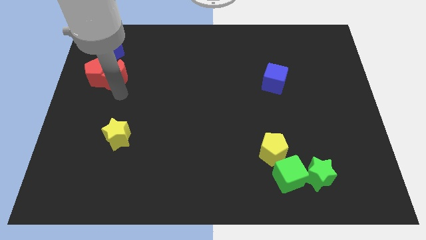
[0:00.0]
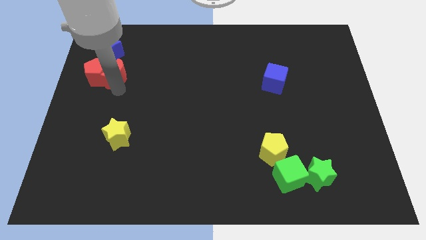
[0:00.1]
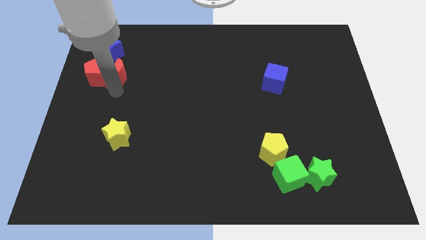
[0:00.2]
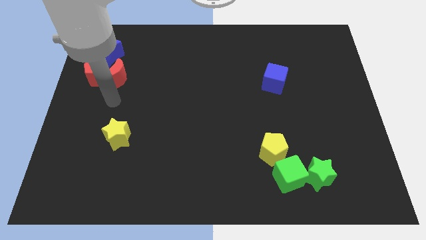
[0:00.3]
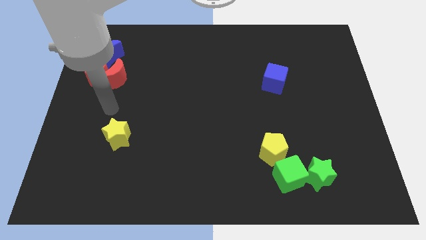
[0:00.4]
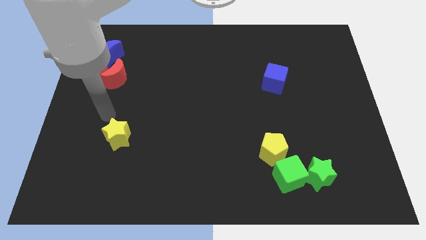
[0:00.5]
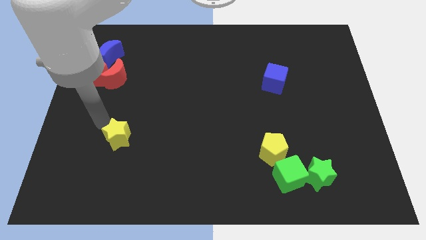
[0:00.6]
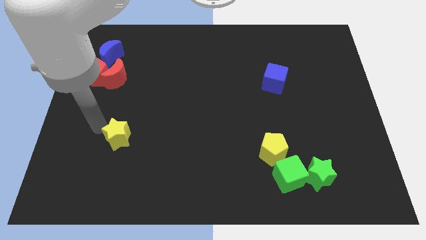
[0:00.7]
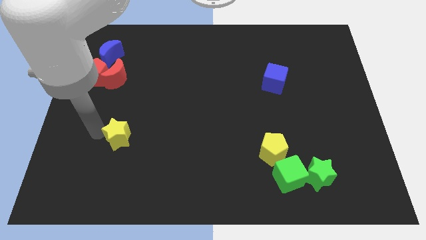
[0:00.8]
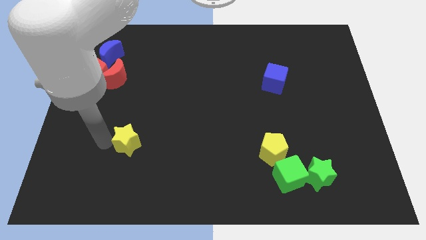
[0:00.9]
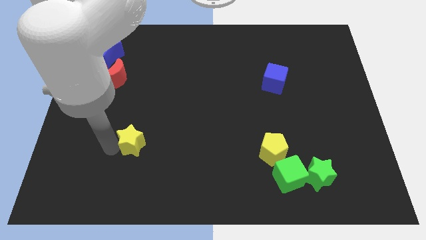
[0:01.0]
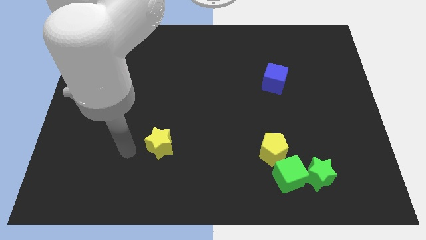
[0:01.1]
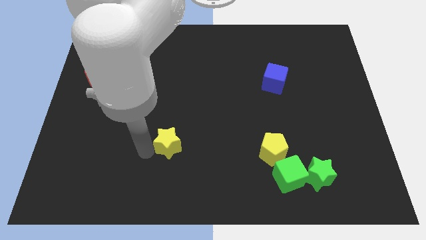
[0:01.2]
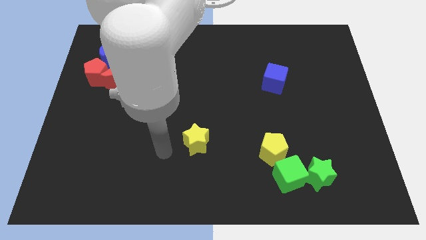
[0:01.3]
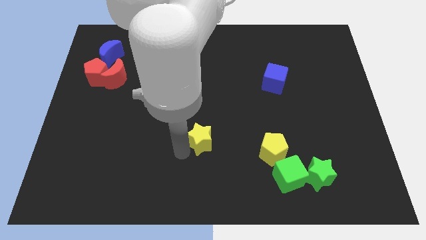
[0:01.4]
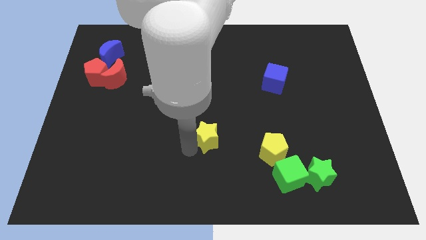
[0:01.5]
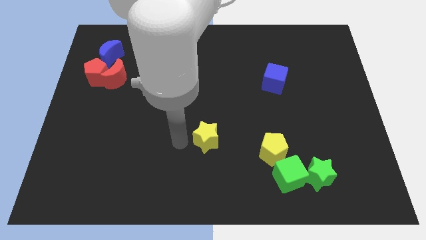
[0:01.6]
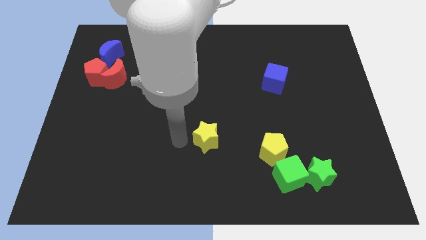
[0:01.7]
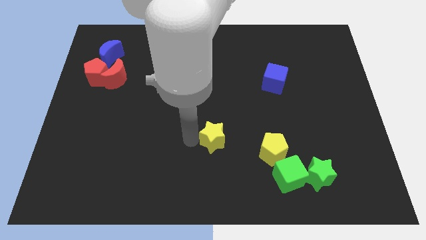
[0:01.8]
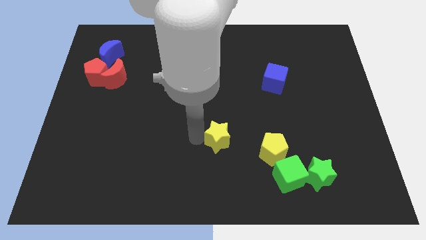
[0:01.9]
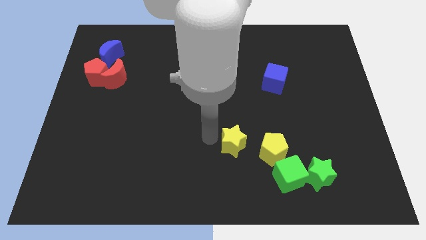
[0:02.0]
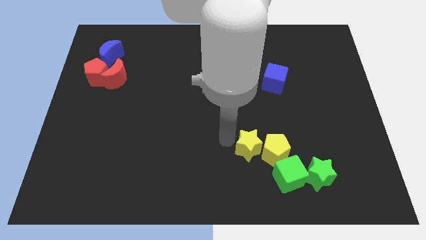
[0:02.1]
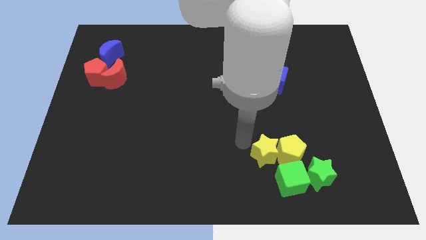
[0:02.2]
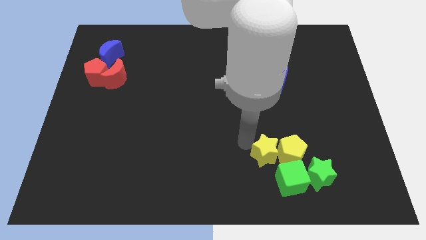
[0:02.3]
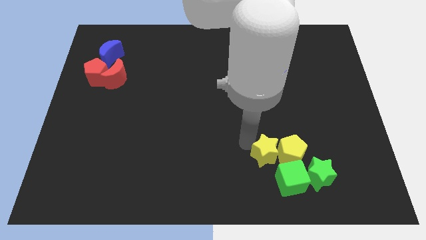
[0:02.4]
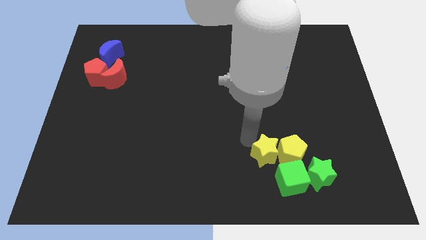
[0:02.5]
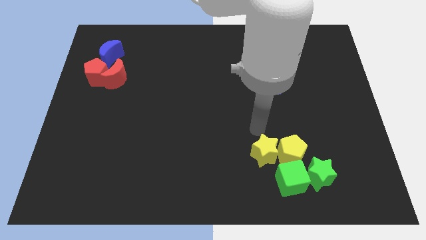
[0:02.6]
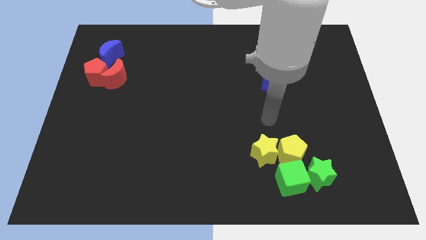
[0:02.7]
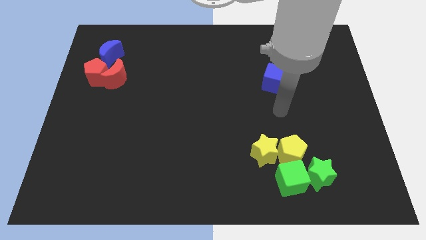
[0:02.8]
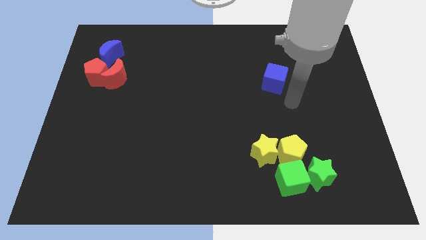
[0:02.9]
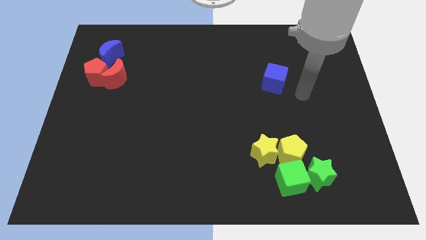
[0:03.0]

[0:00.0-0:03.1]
put the yellow star parallel left to the yellow pentagon

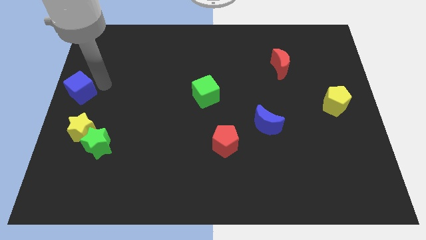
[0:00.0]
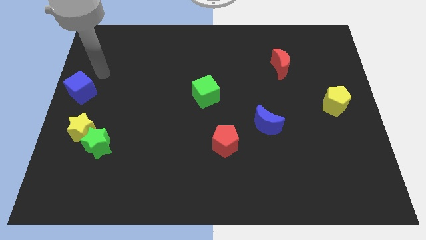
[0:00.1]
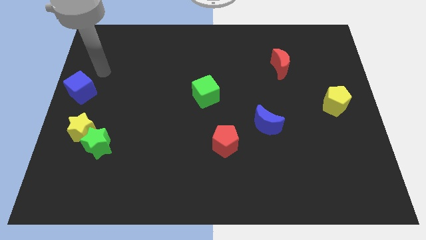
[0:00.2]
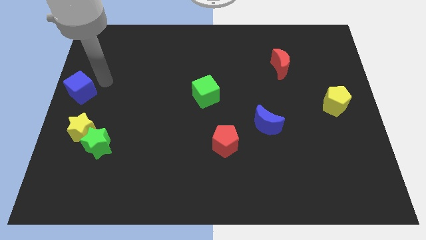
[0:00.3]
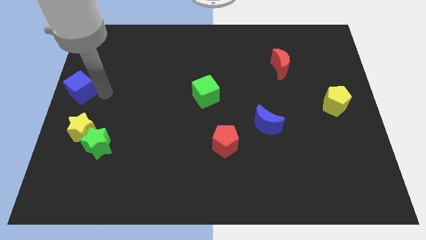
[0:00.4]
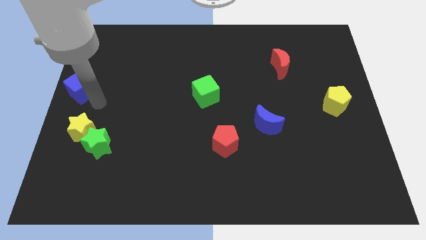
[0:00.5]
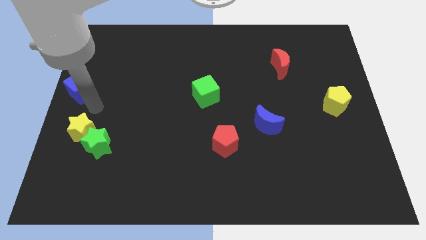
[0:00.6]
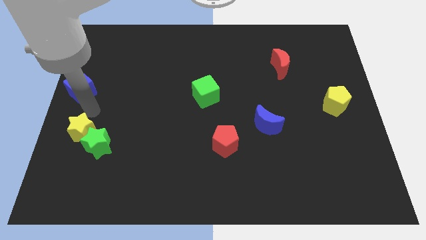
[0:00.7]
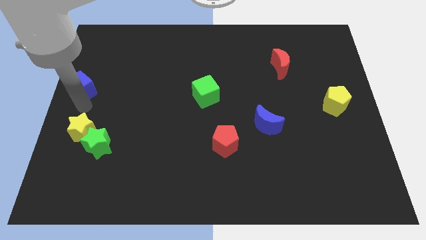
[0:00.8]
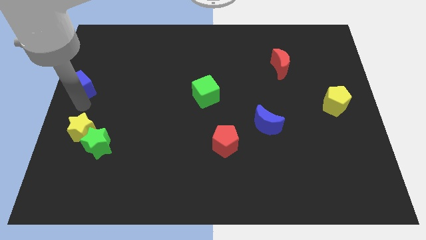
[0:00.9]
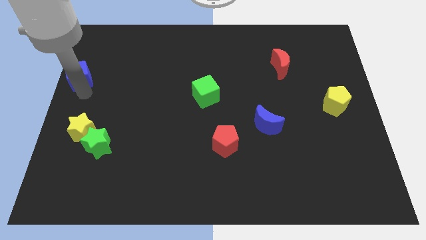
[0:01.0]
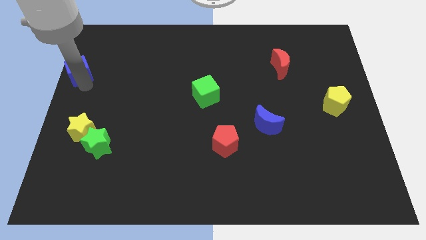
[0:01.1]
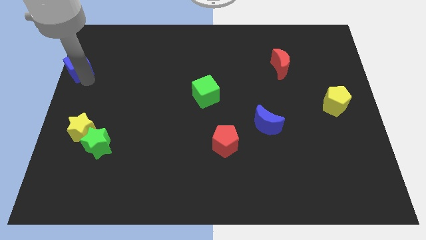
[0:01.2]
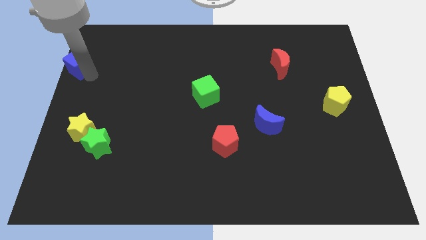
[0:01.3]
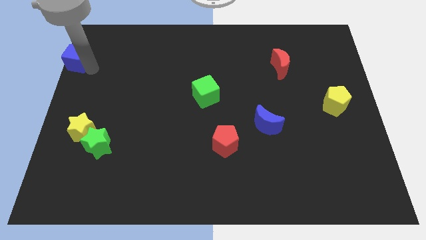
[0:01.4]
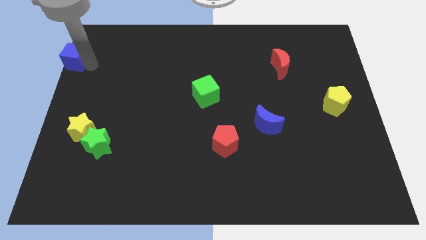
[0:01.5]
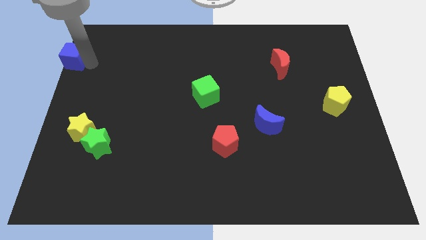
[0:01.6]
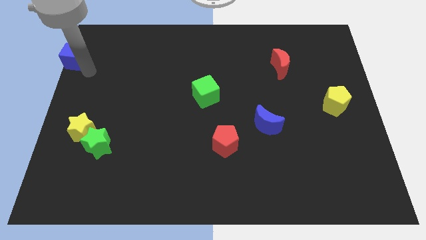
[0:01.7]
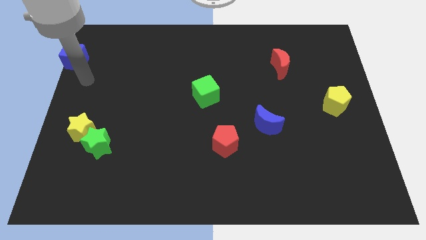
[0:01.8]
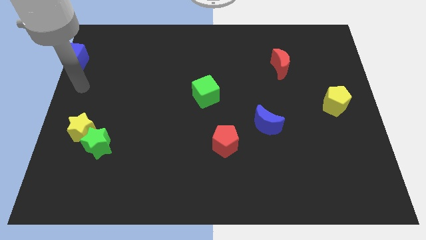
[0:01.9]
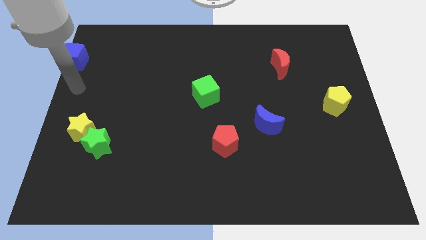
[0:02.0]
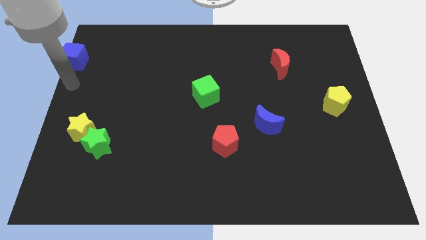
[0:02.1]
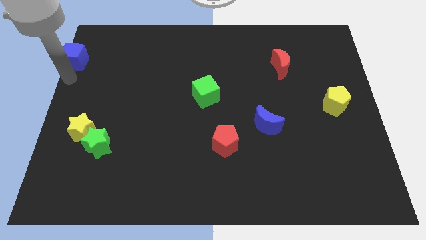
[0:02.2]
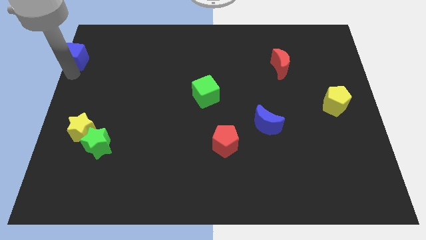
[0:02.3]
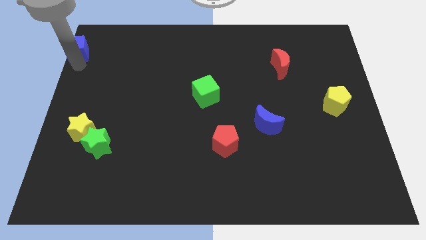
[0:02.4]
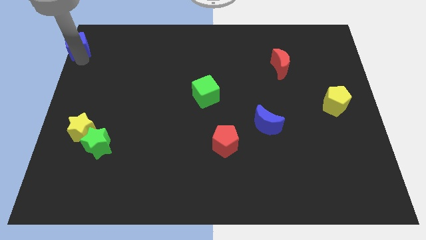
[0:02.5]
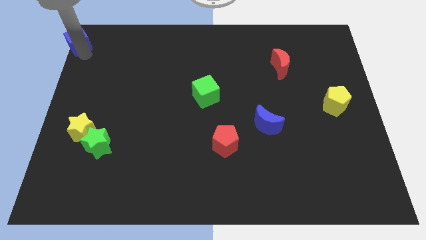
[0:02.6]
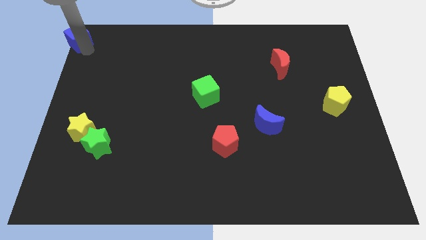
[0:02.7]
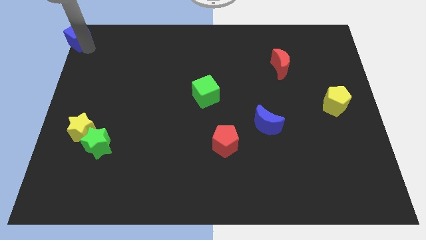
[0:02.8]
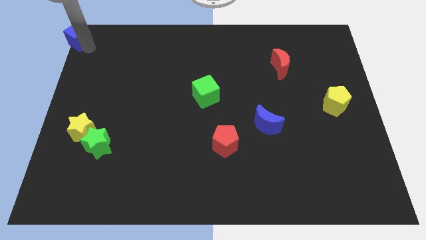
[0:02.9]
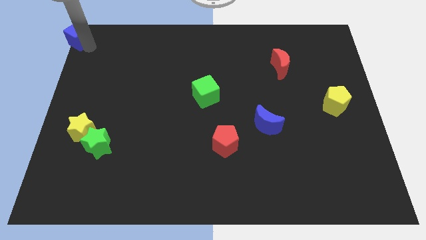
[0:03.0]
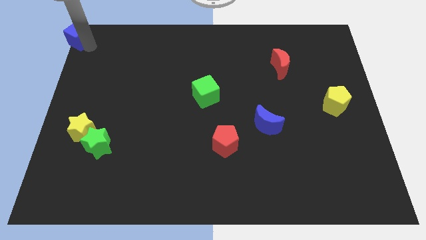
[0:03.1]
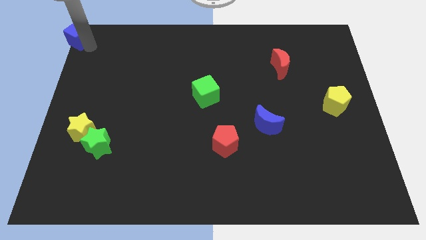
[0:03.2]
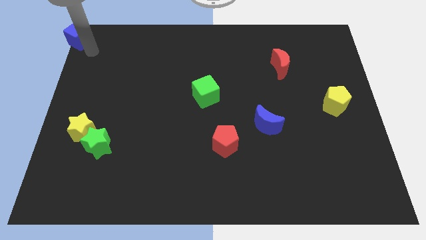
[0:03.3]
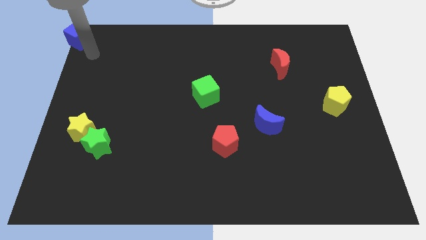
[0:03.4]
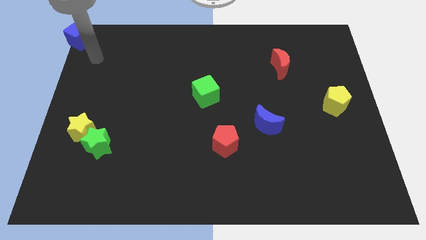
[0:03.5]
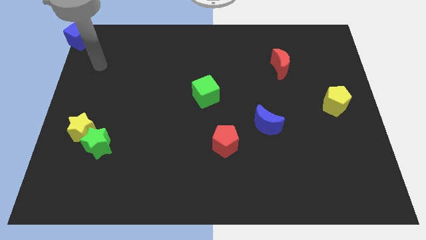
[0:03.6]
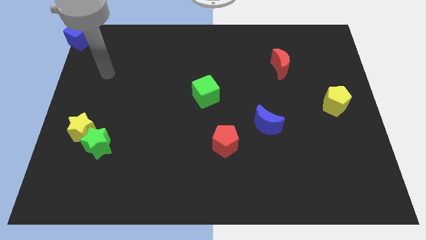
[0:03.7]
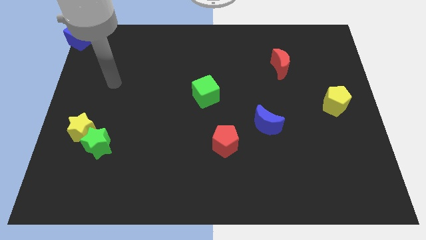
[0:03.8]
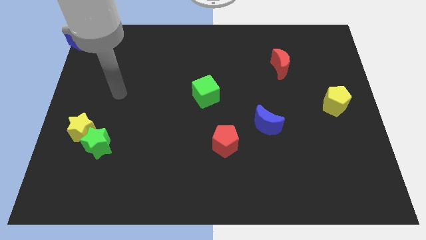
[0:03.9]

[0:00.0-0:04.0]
slide the blue cube to the top left corner of the board

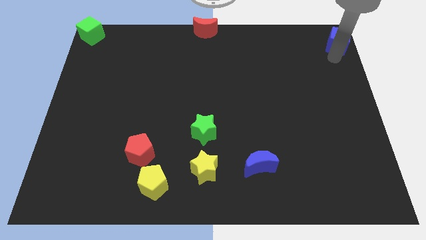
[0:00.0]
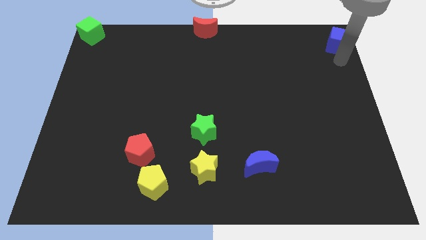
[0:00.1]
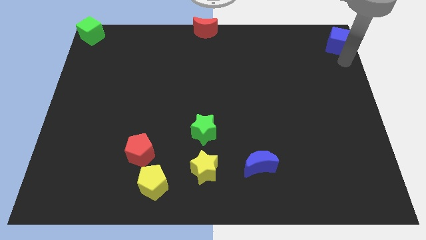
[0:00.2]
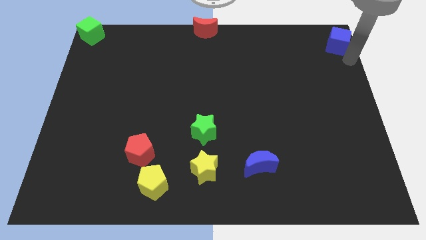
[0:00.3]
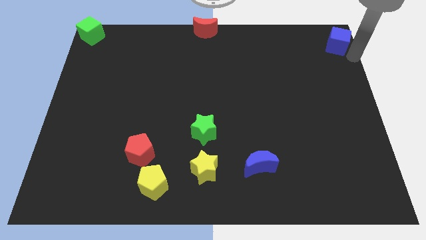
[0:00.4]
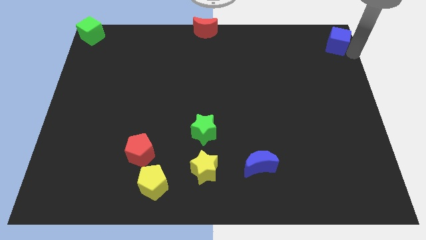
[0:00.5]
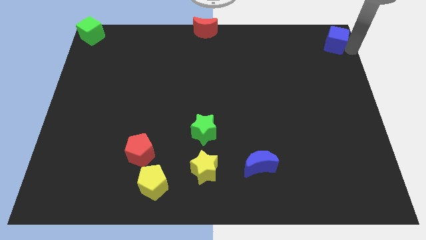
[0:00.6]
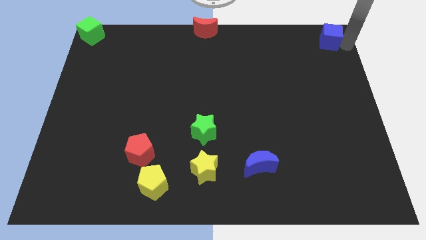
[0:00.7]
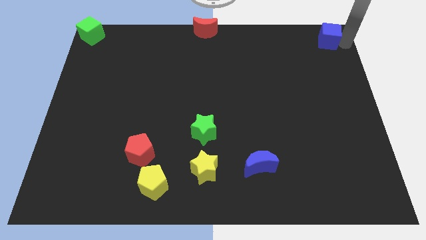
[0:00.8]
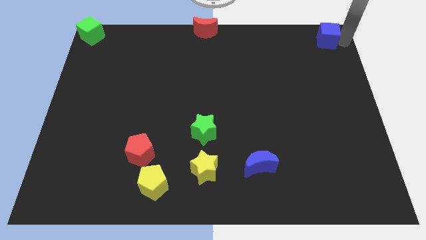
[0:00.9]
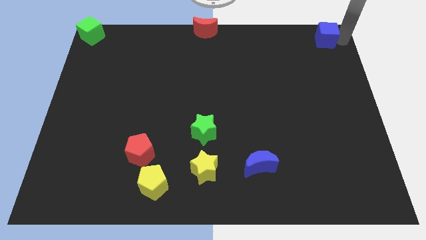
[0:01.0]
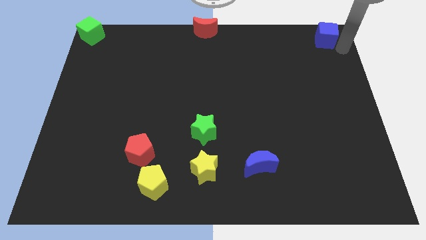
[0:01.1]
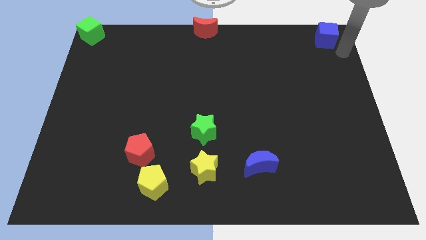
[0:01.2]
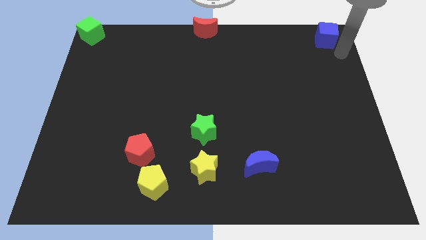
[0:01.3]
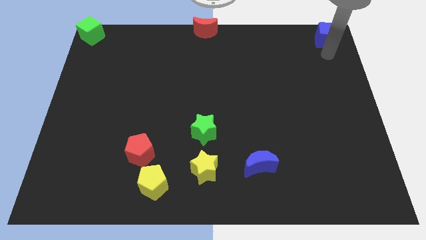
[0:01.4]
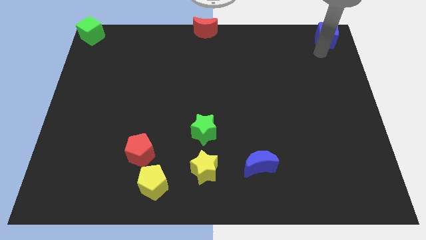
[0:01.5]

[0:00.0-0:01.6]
slight push the blue cube to the top right

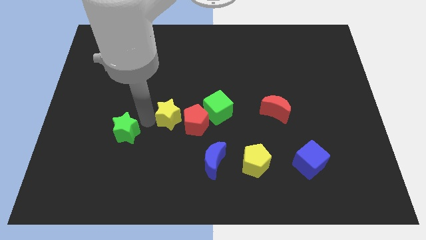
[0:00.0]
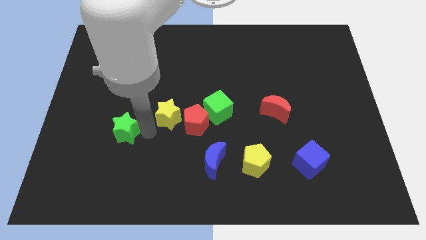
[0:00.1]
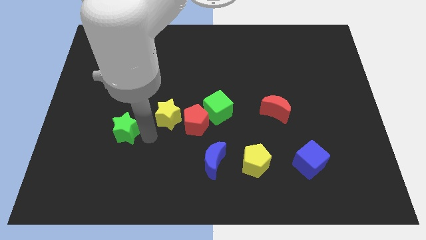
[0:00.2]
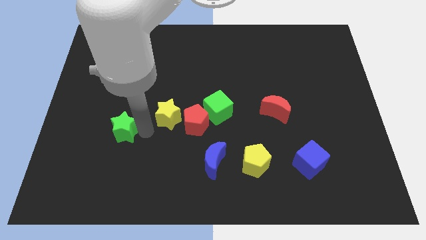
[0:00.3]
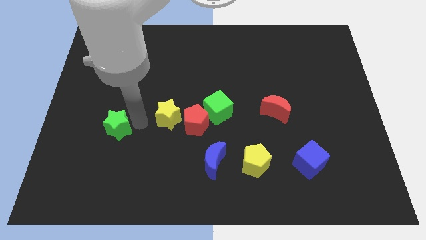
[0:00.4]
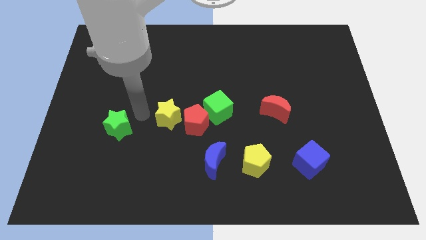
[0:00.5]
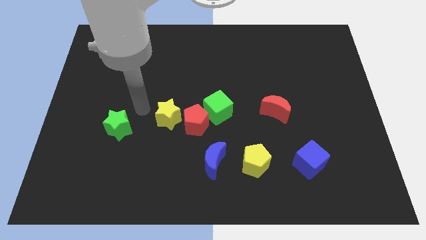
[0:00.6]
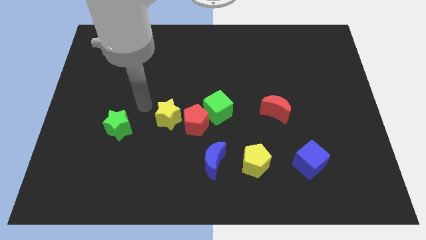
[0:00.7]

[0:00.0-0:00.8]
push the green star towards left
